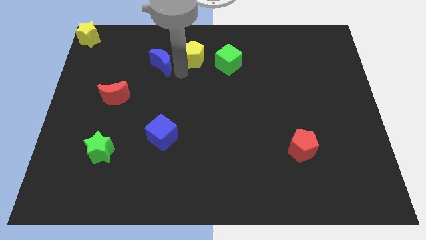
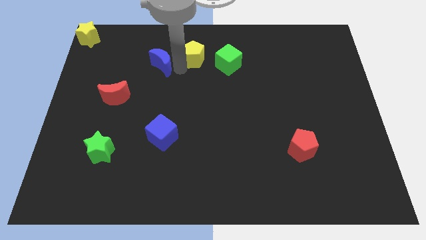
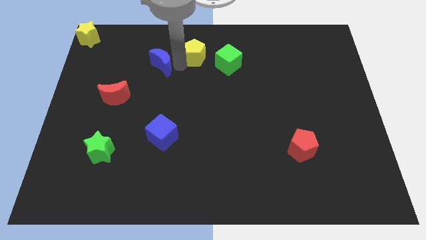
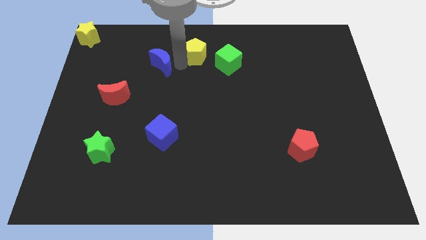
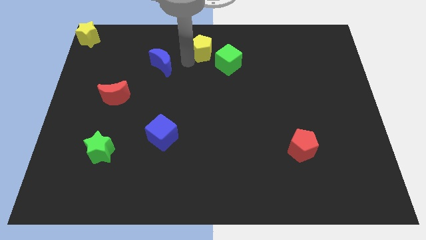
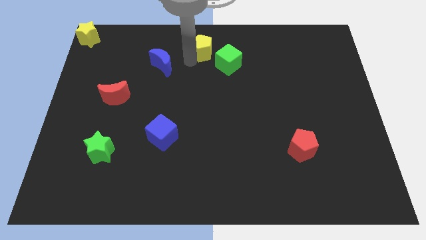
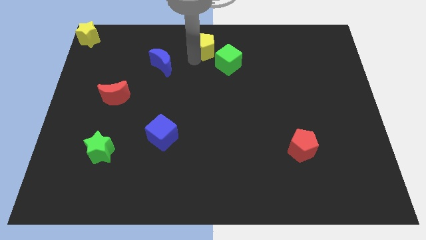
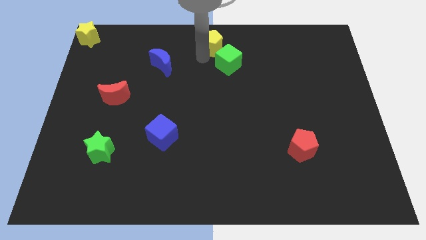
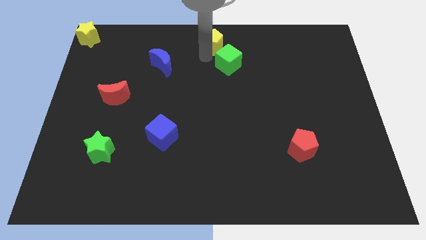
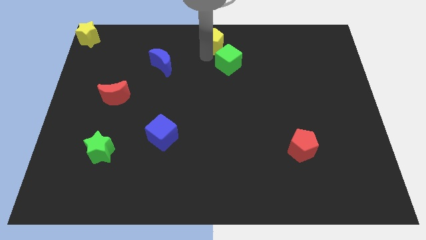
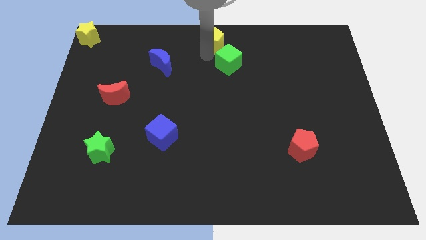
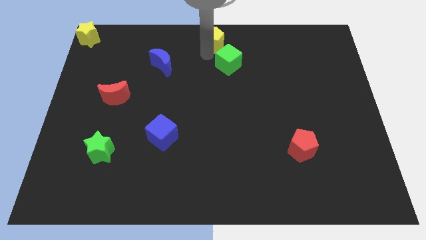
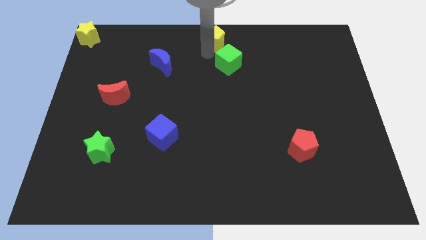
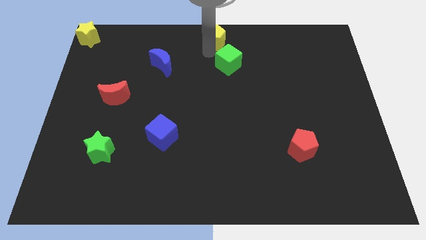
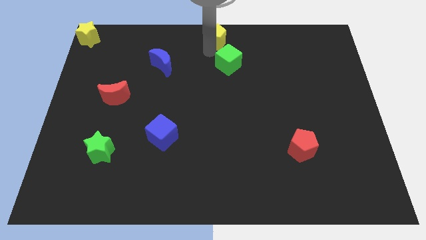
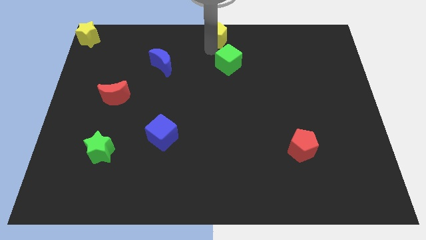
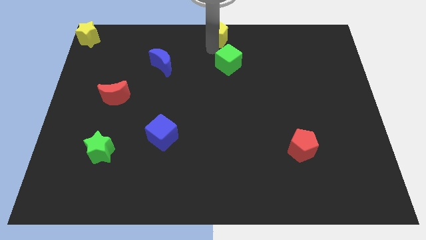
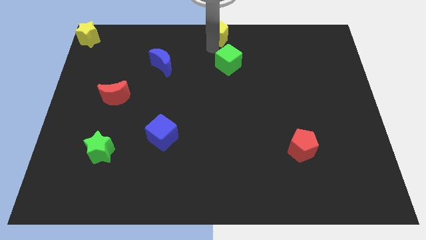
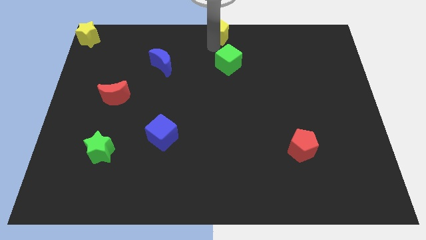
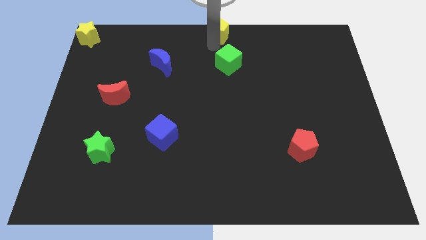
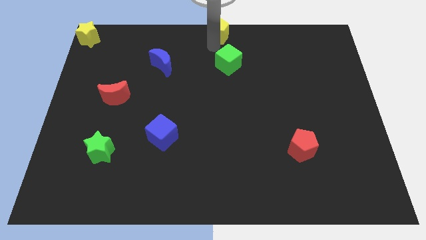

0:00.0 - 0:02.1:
place the yellow pentagon above the green cube

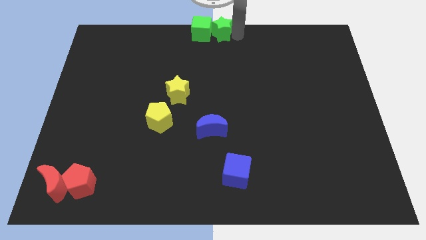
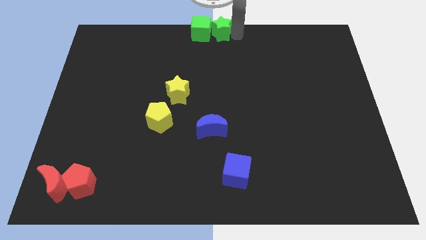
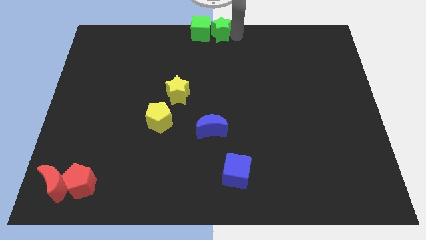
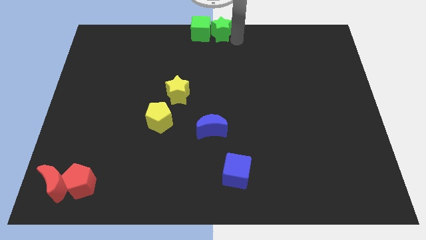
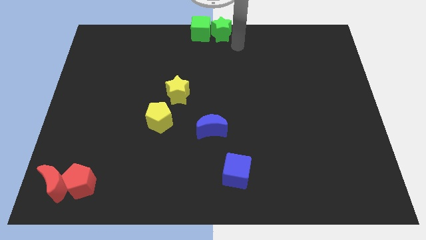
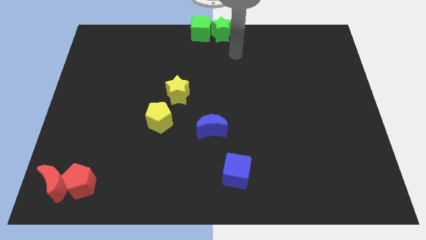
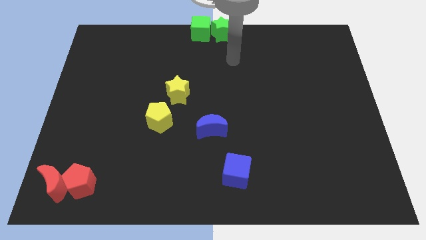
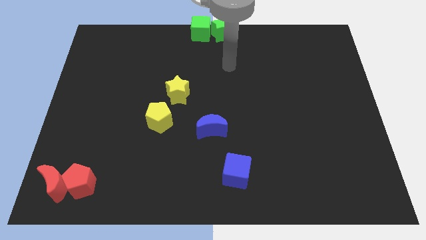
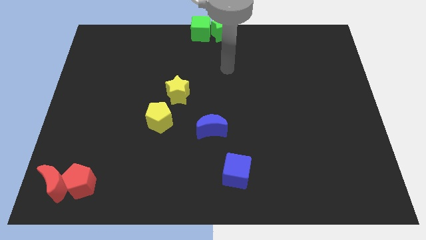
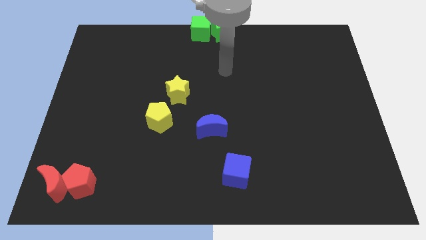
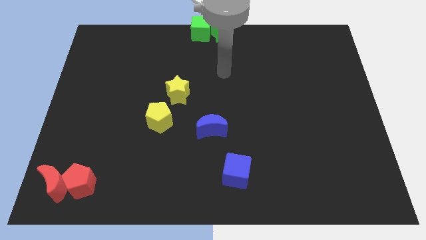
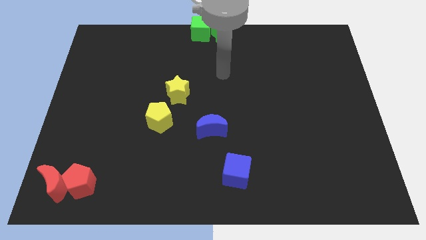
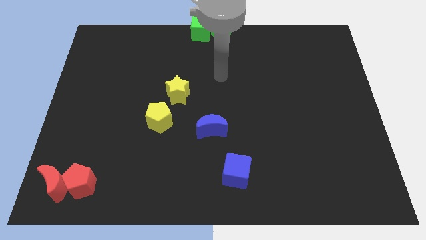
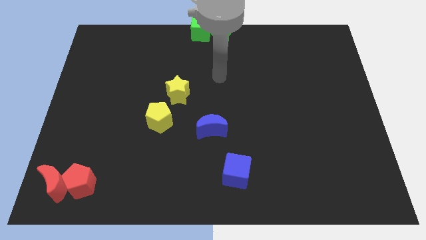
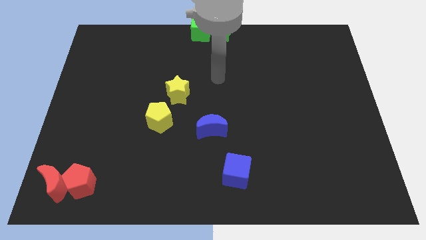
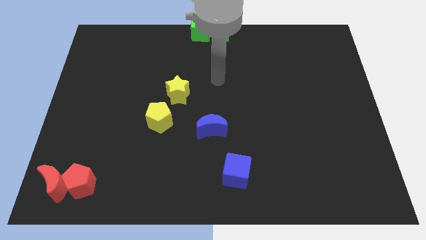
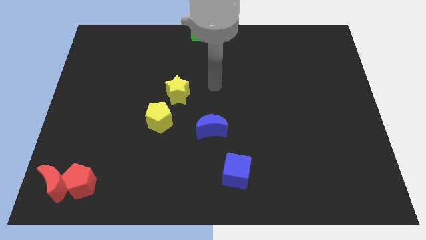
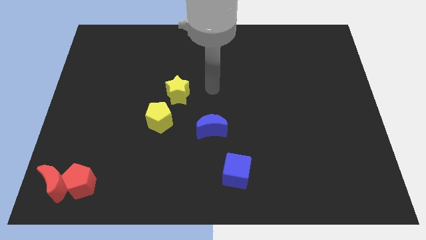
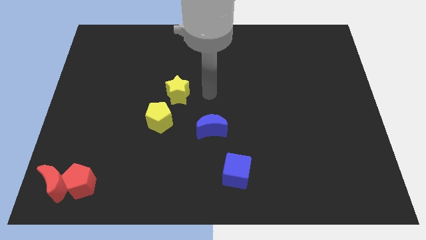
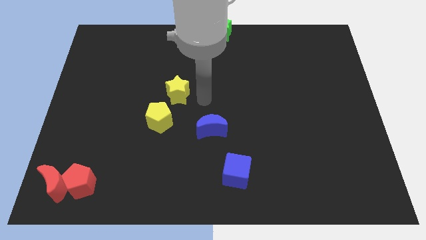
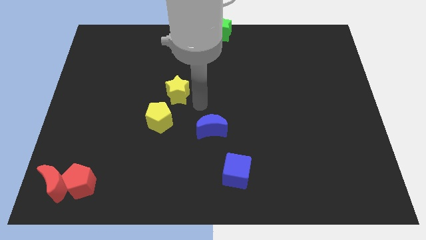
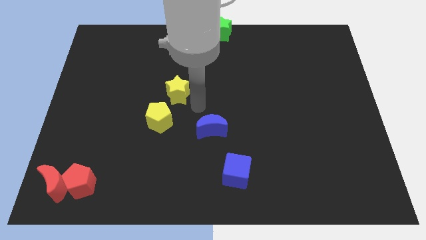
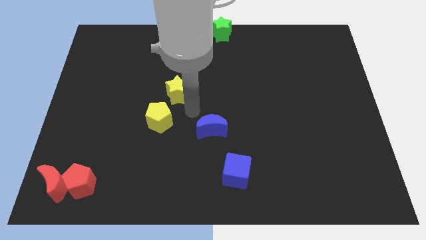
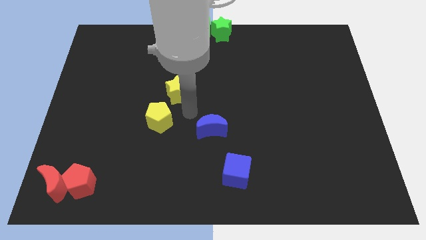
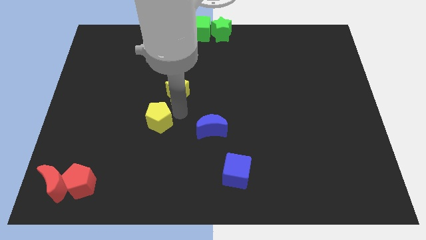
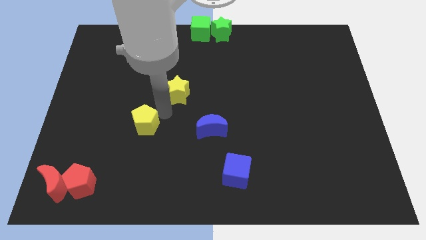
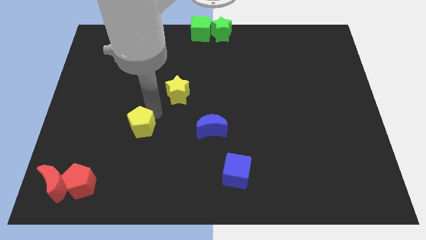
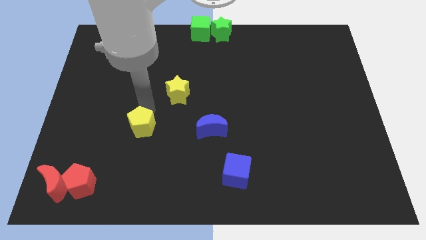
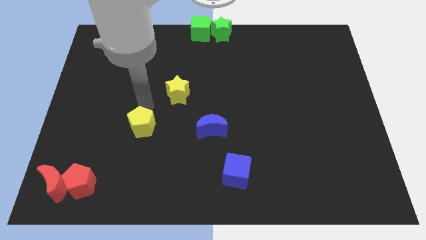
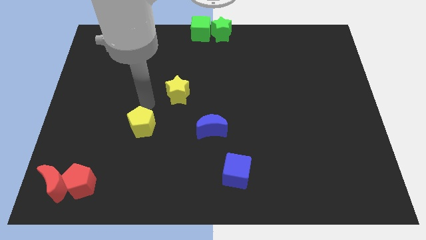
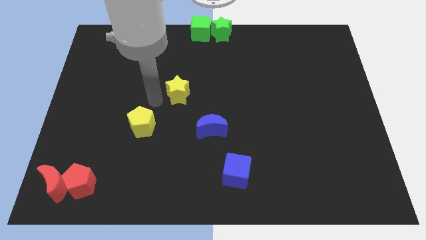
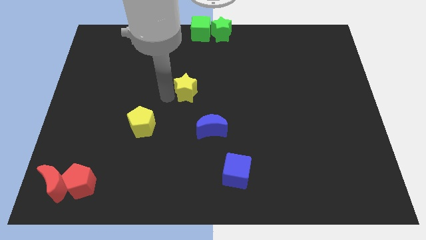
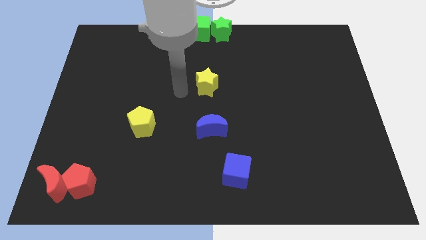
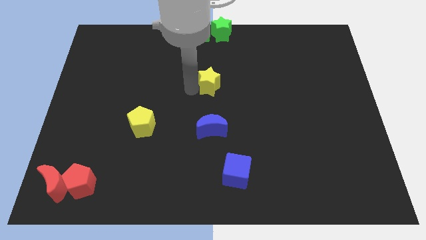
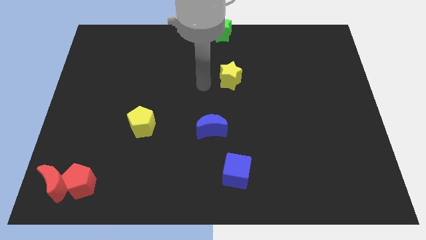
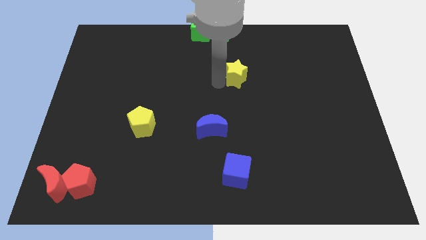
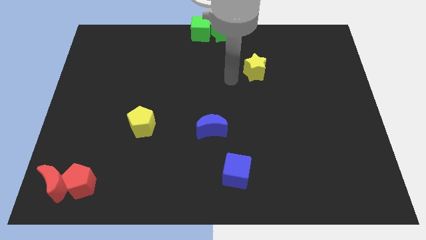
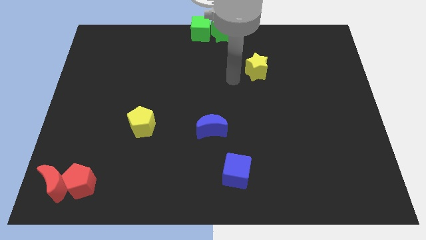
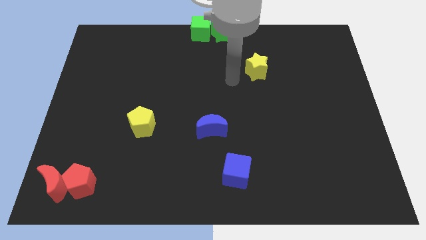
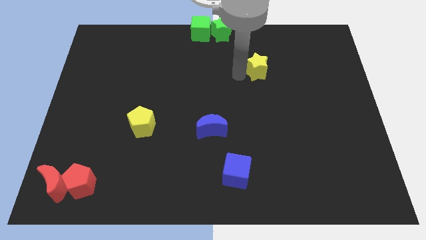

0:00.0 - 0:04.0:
place the yellow star diagonal to the green star

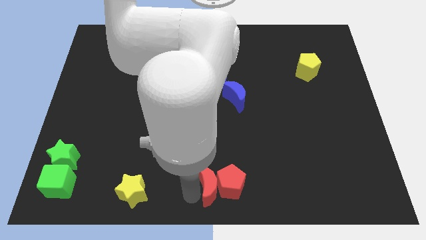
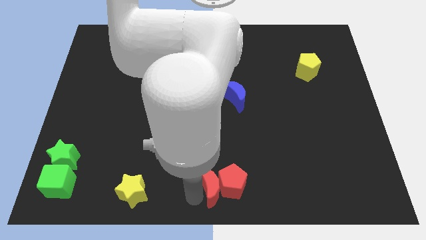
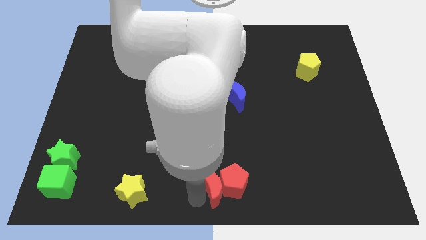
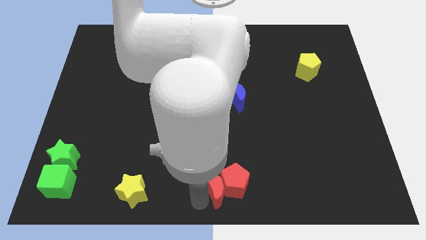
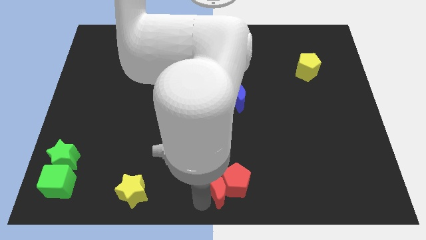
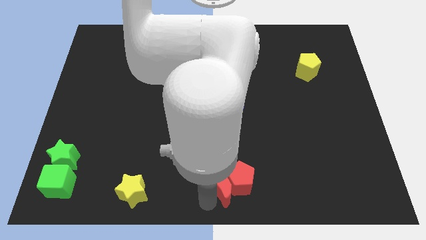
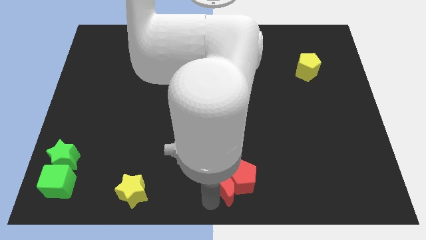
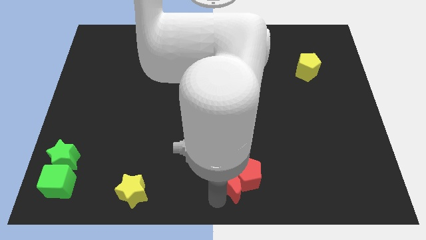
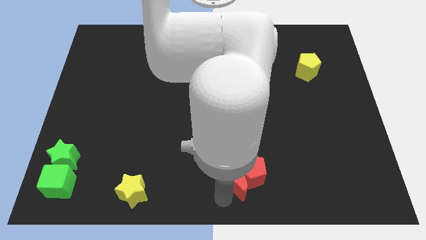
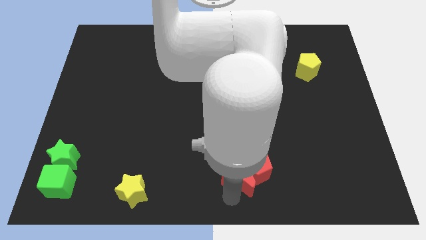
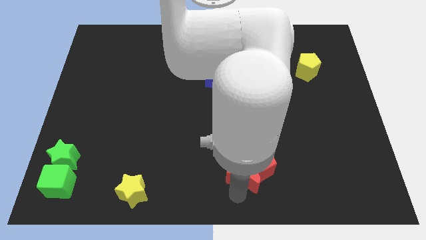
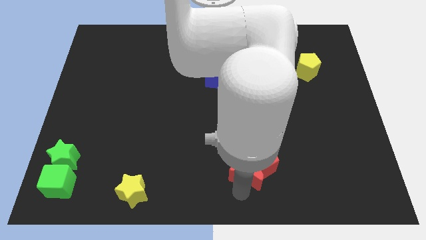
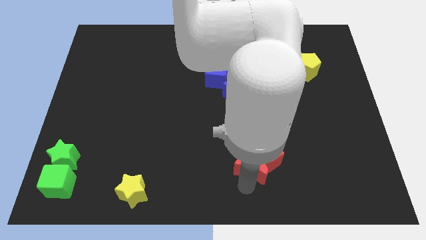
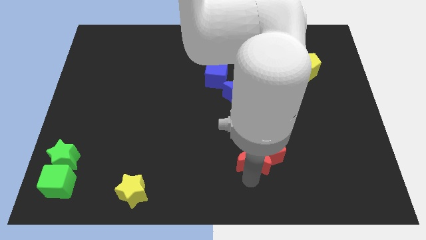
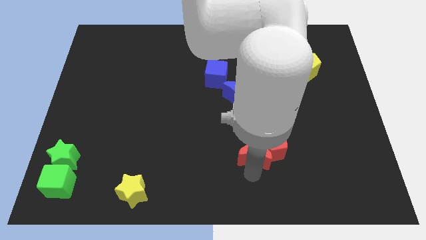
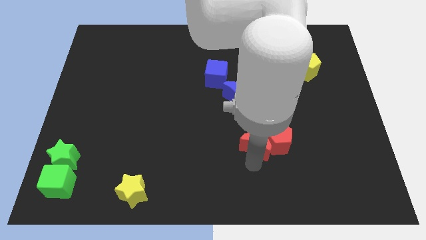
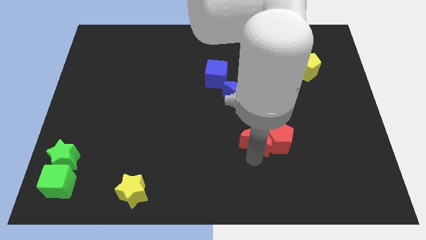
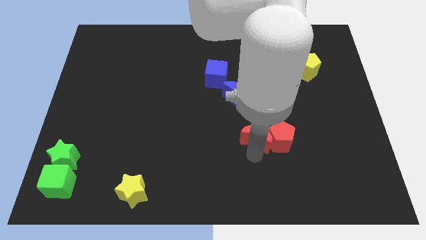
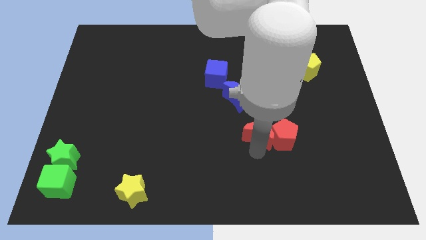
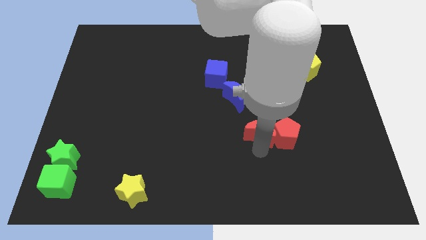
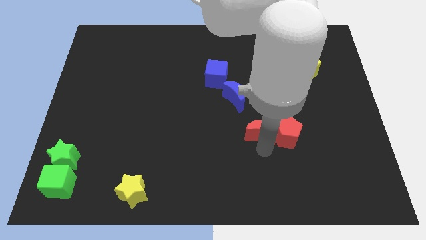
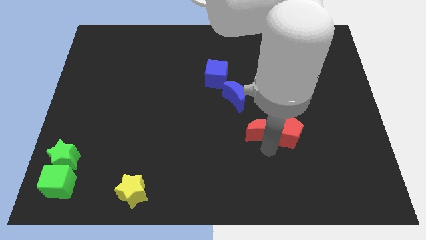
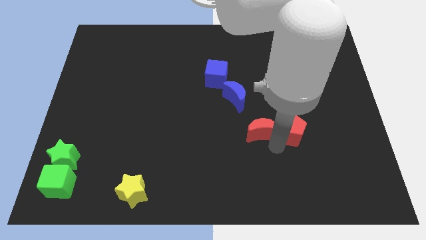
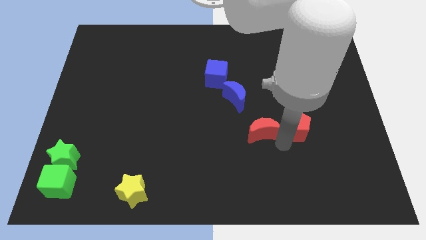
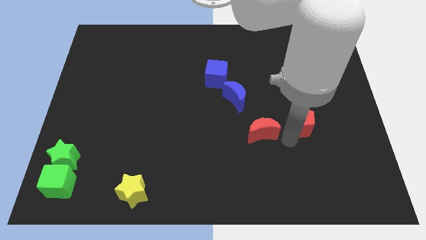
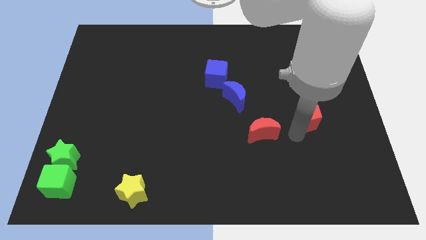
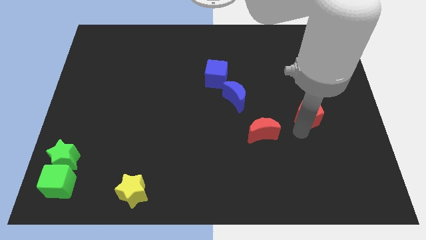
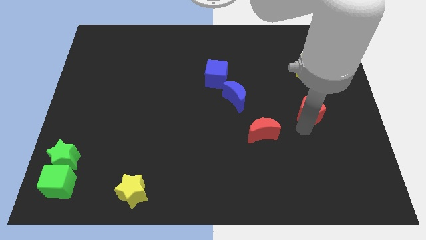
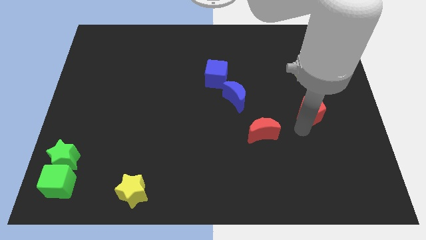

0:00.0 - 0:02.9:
separate the red pentagon from red crescent
